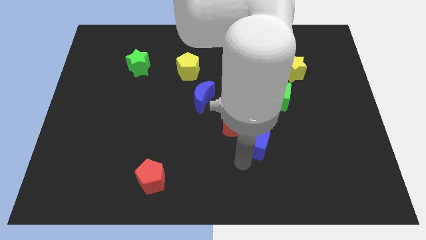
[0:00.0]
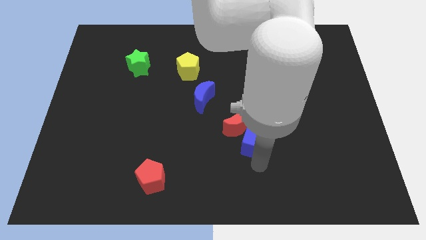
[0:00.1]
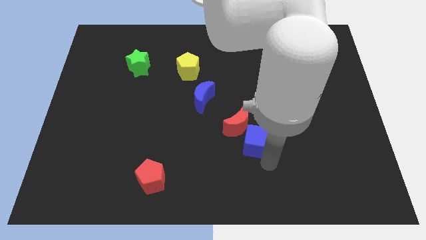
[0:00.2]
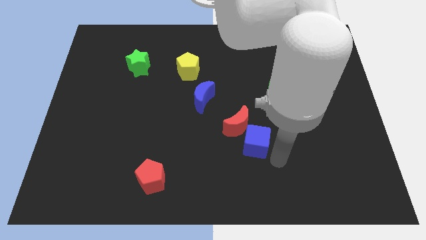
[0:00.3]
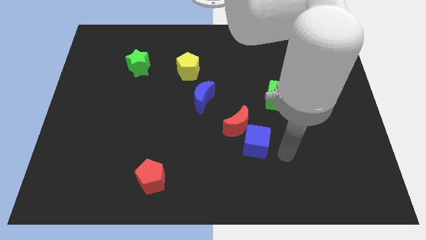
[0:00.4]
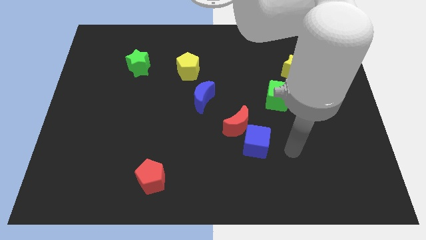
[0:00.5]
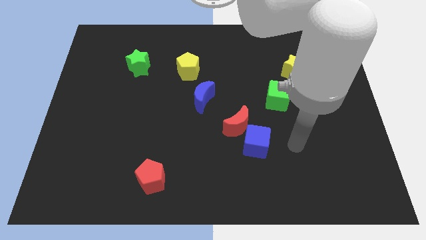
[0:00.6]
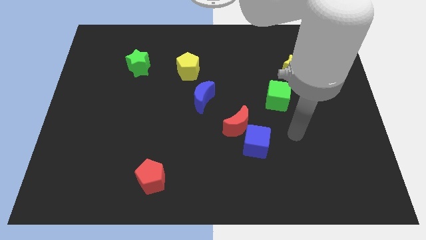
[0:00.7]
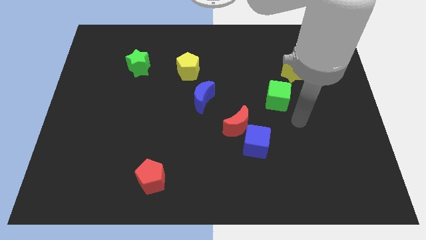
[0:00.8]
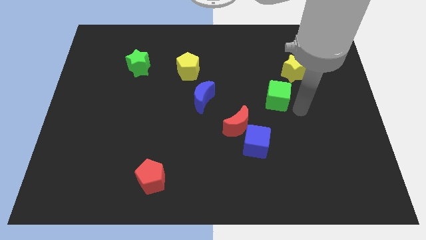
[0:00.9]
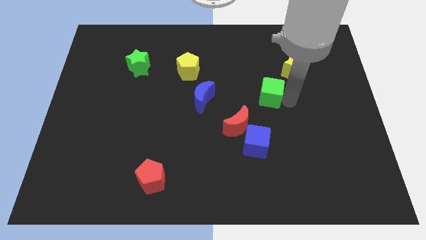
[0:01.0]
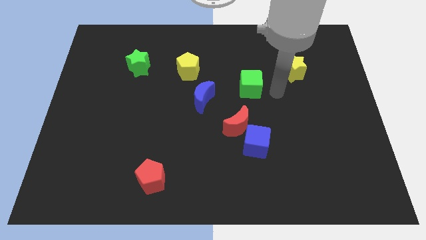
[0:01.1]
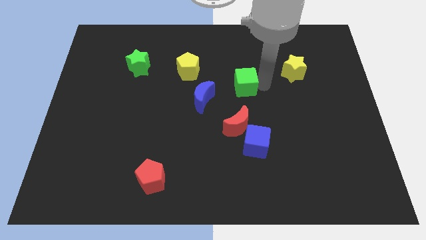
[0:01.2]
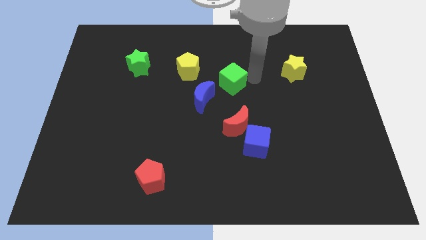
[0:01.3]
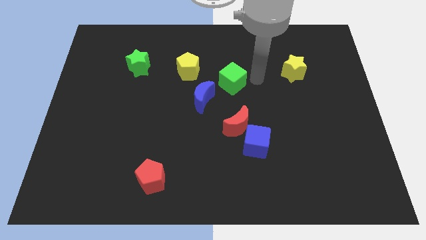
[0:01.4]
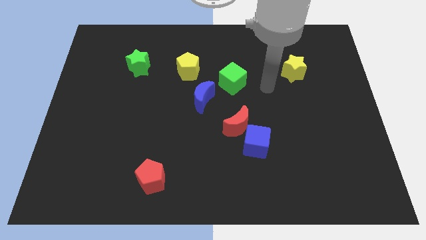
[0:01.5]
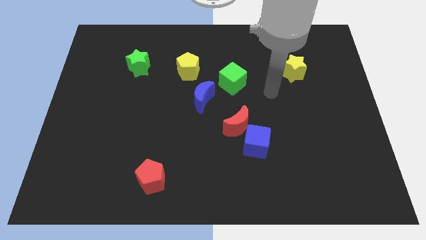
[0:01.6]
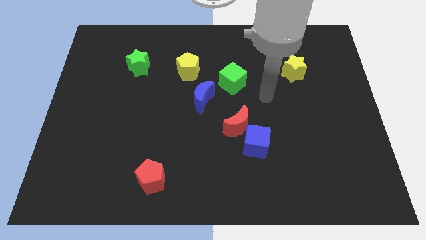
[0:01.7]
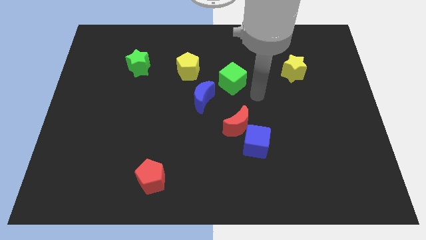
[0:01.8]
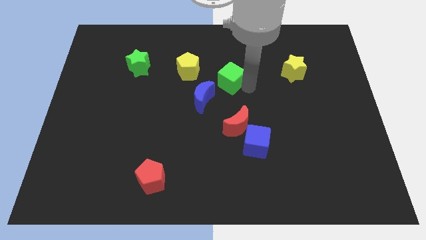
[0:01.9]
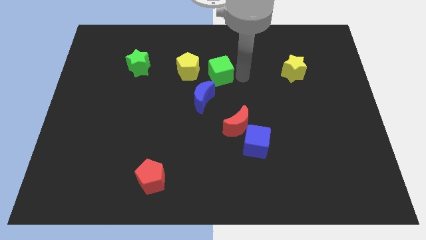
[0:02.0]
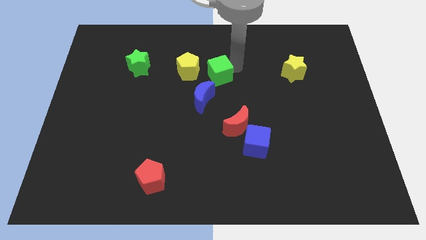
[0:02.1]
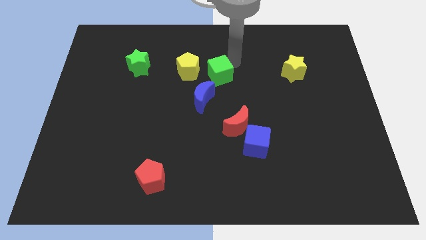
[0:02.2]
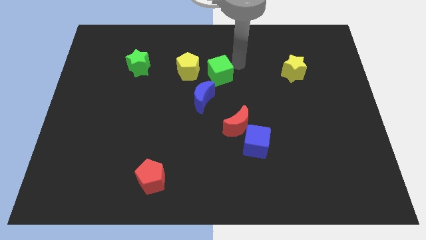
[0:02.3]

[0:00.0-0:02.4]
move the green cube parallel to the right of the yellow pentagon

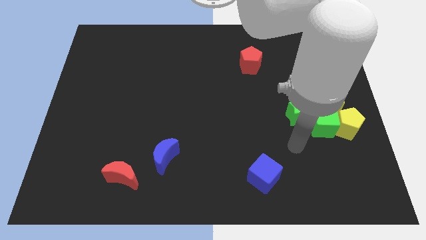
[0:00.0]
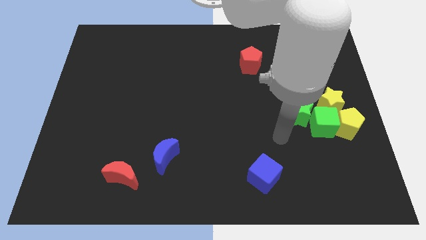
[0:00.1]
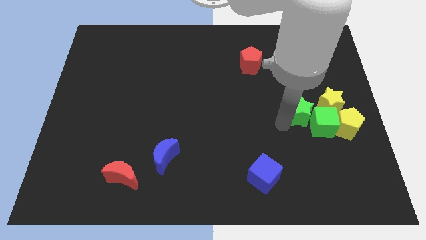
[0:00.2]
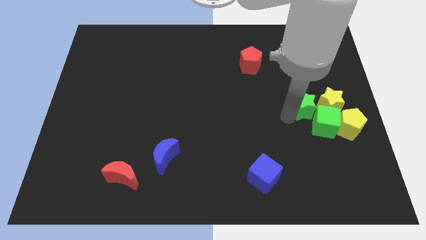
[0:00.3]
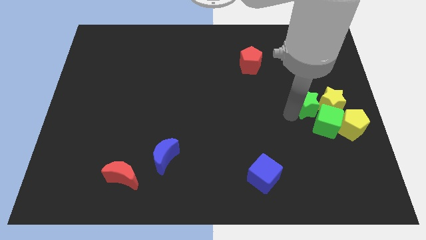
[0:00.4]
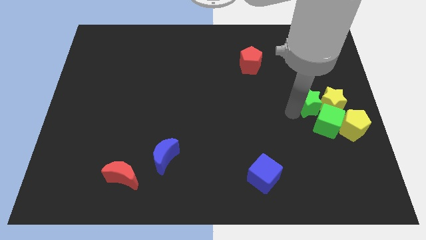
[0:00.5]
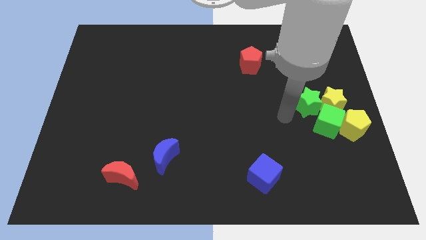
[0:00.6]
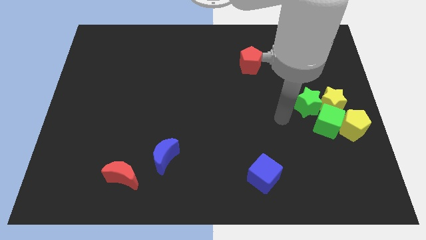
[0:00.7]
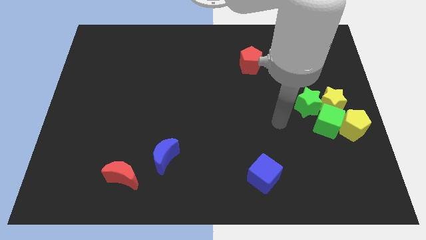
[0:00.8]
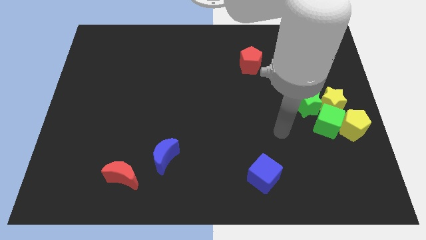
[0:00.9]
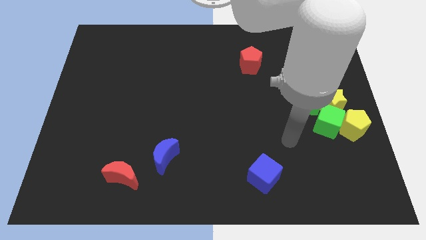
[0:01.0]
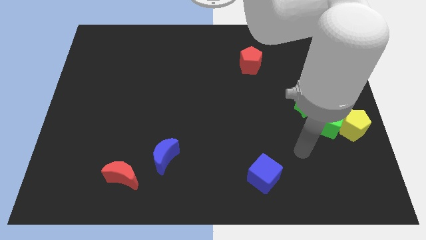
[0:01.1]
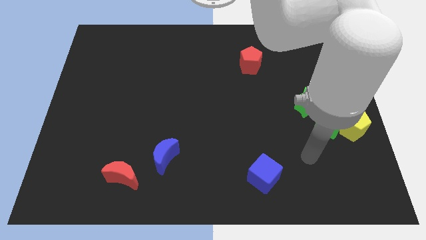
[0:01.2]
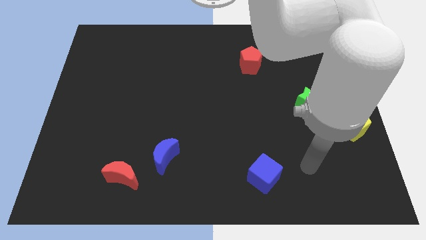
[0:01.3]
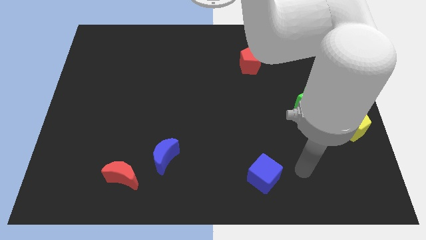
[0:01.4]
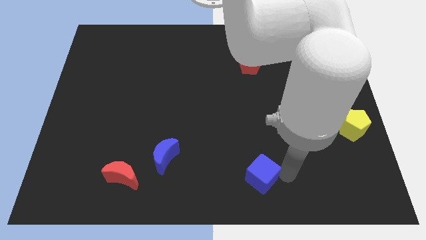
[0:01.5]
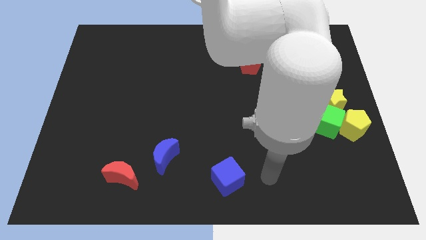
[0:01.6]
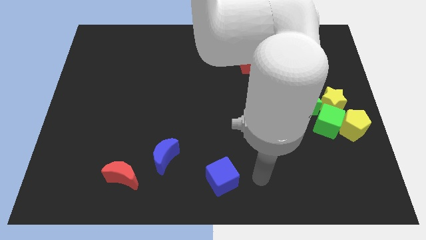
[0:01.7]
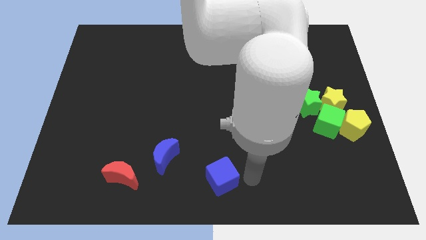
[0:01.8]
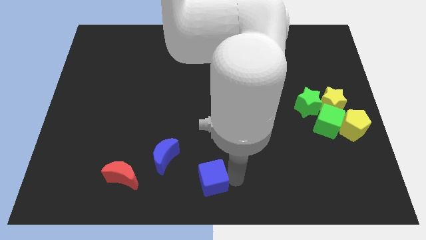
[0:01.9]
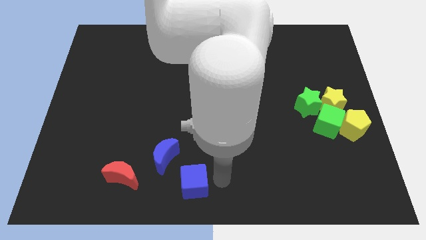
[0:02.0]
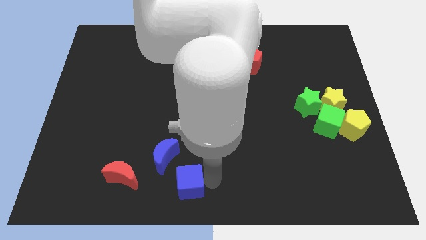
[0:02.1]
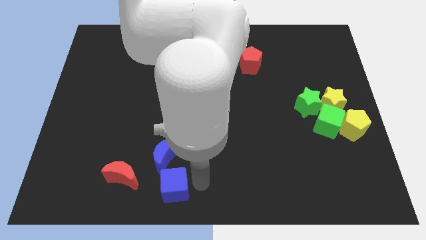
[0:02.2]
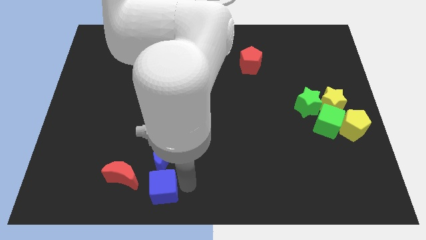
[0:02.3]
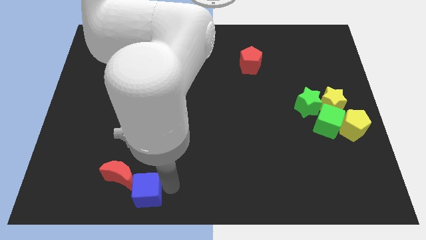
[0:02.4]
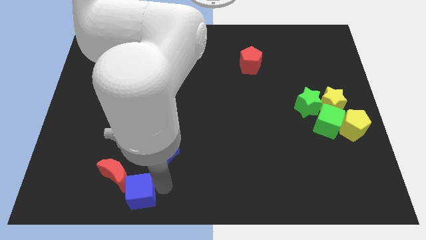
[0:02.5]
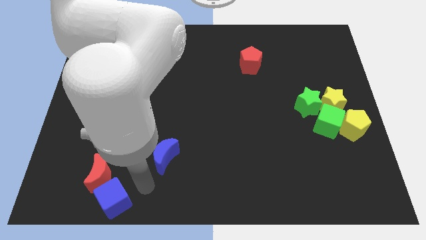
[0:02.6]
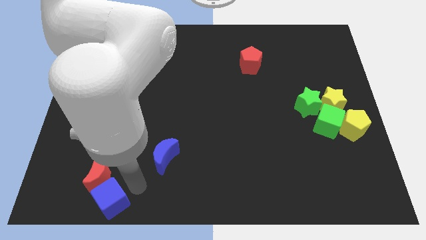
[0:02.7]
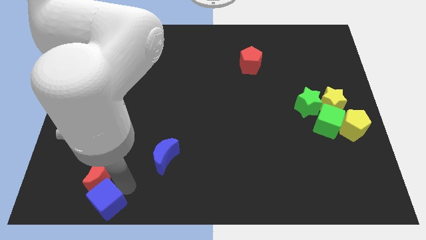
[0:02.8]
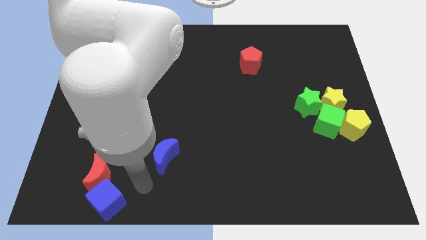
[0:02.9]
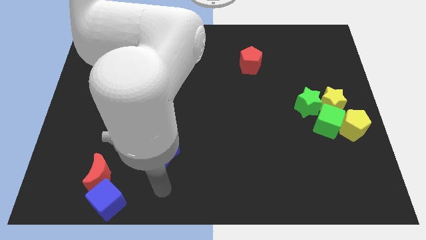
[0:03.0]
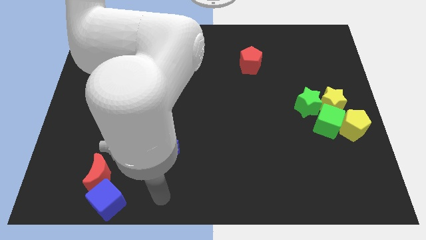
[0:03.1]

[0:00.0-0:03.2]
drag the blue cube to the left

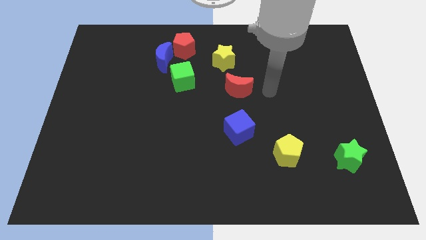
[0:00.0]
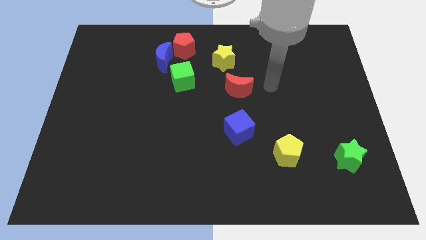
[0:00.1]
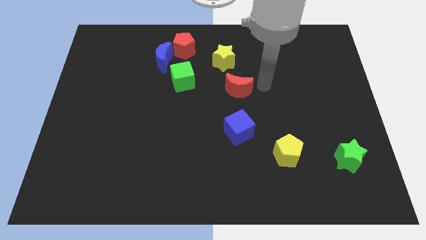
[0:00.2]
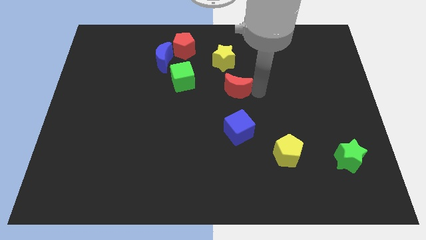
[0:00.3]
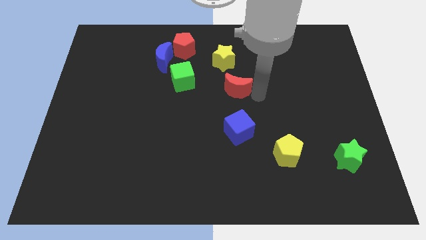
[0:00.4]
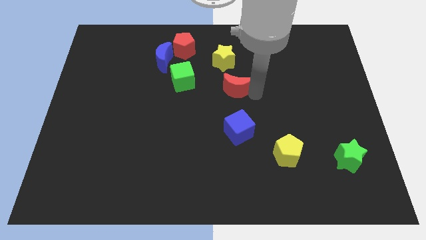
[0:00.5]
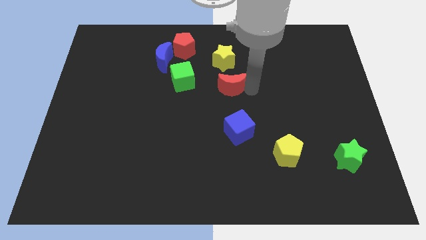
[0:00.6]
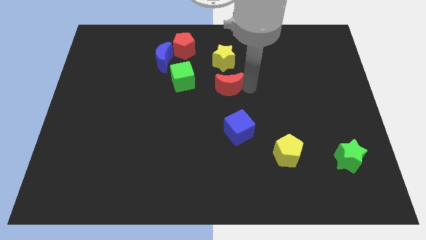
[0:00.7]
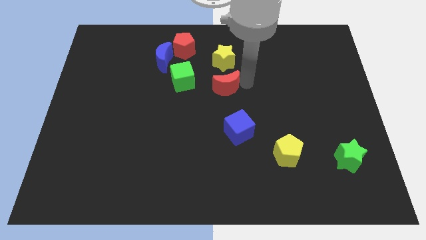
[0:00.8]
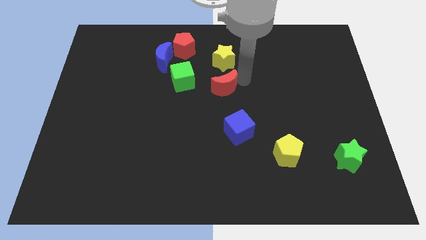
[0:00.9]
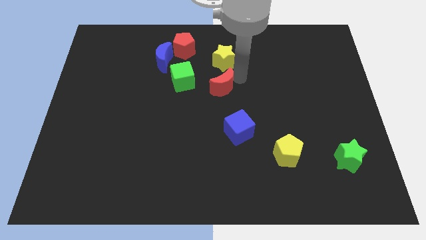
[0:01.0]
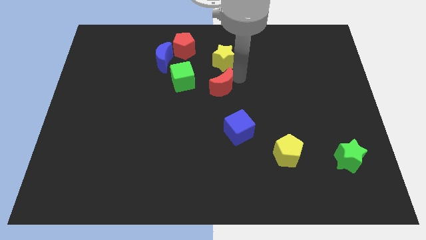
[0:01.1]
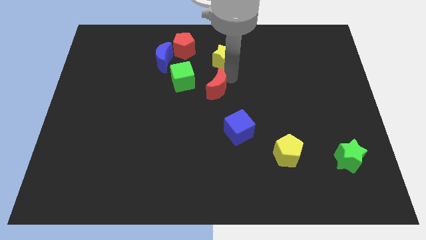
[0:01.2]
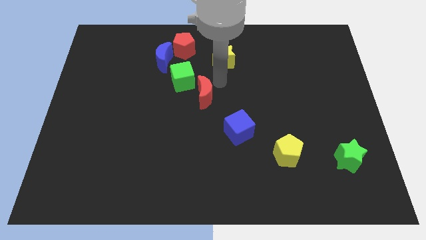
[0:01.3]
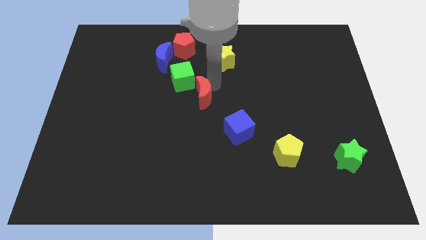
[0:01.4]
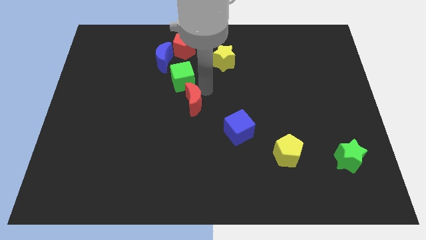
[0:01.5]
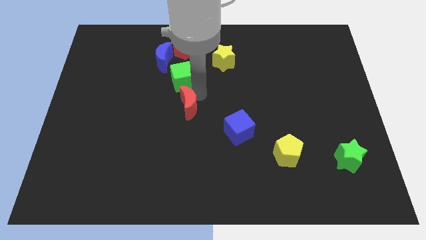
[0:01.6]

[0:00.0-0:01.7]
move the red moon vertically below the green cube

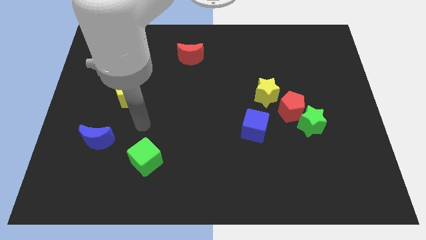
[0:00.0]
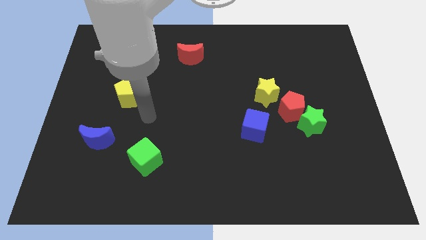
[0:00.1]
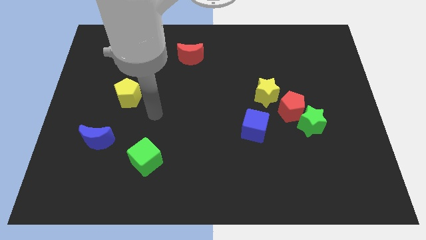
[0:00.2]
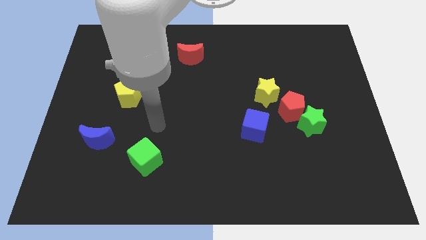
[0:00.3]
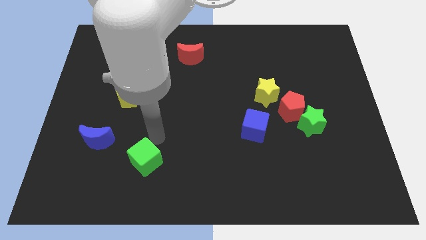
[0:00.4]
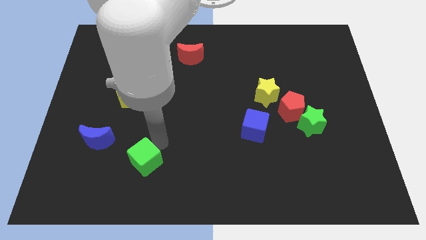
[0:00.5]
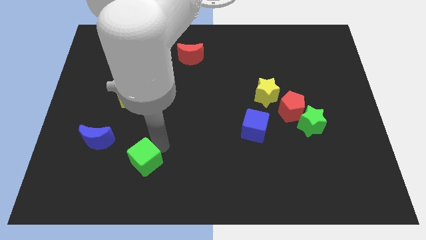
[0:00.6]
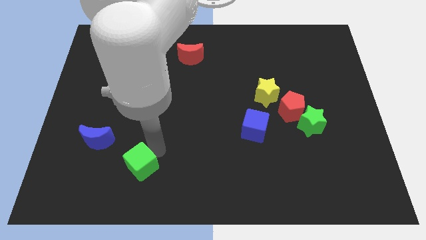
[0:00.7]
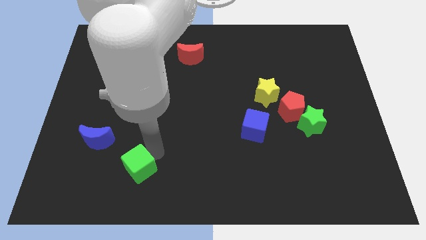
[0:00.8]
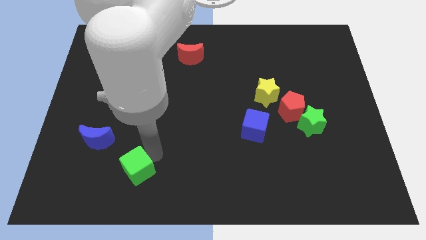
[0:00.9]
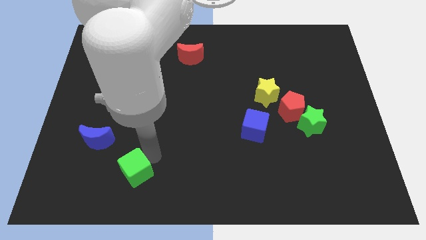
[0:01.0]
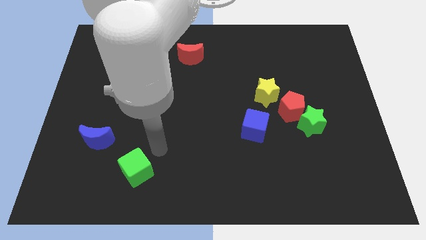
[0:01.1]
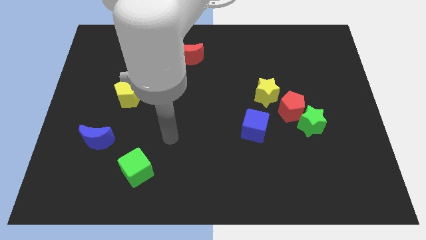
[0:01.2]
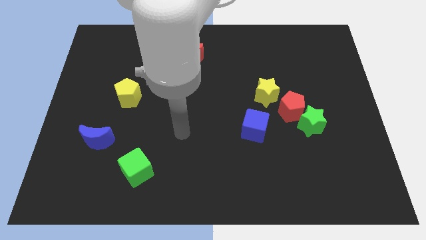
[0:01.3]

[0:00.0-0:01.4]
slightly push the green cube towards the bottom side of the board

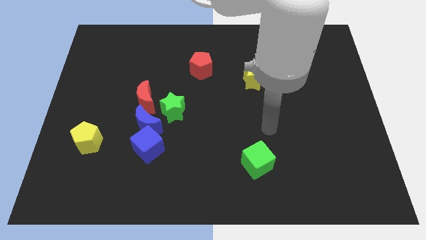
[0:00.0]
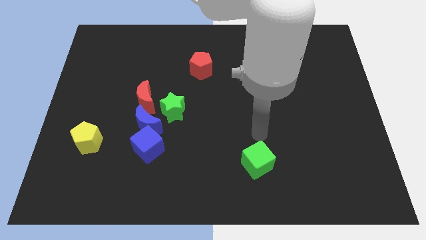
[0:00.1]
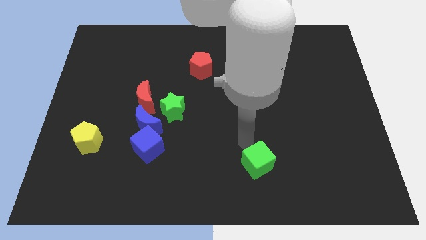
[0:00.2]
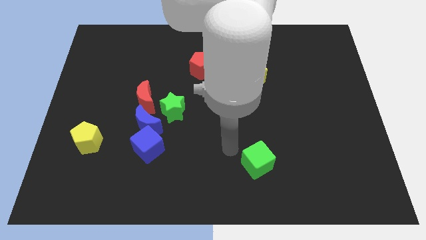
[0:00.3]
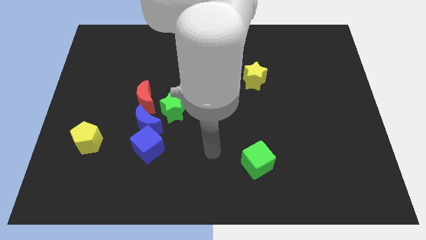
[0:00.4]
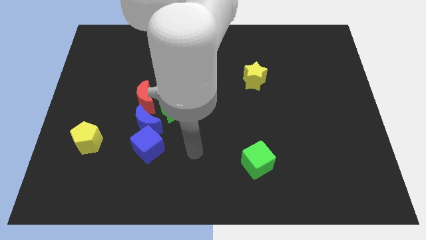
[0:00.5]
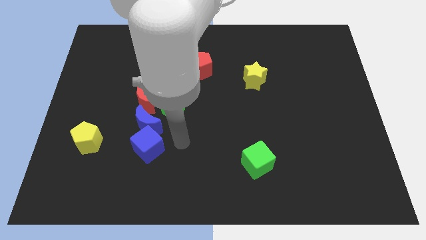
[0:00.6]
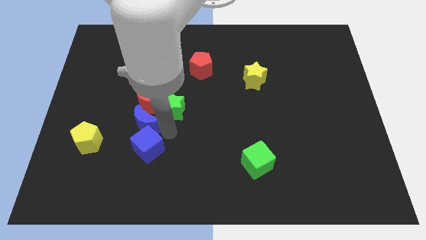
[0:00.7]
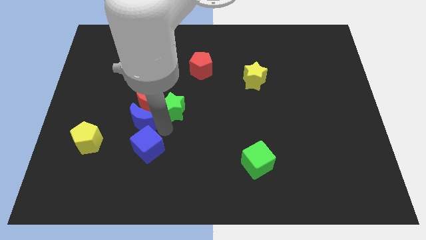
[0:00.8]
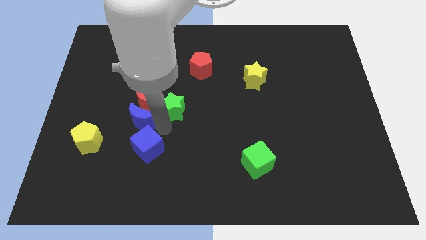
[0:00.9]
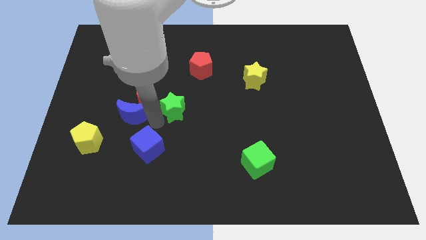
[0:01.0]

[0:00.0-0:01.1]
push the blue crescent slightly to the left
